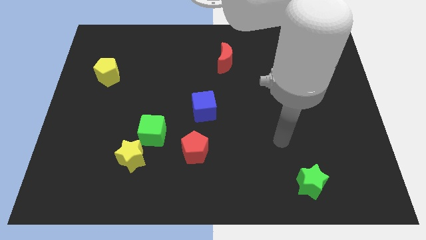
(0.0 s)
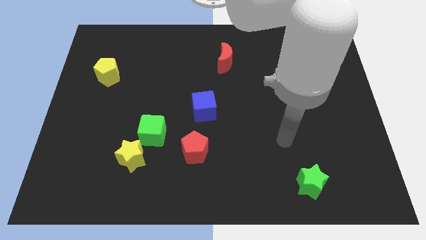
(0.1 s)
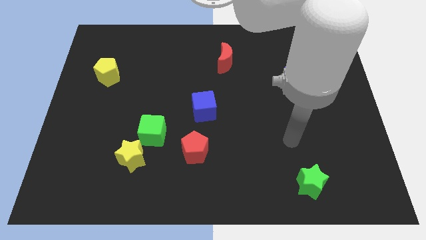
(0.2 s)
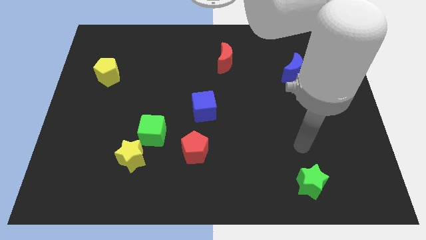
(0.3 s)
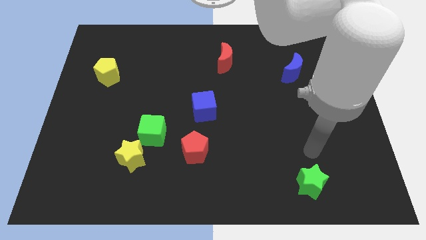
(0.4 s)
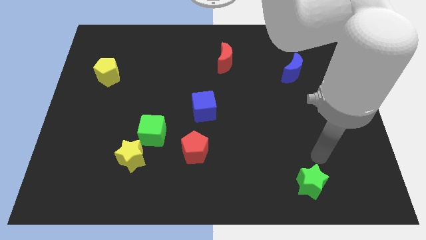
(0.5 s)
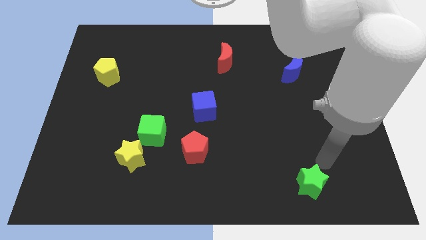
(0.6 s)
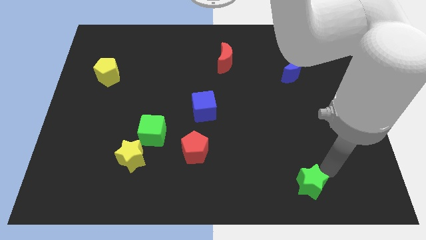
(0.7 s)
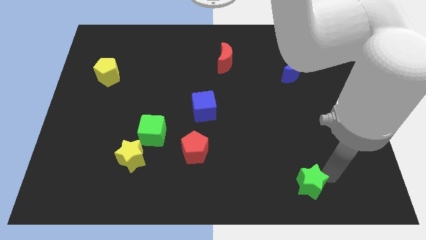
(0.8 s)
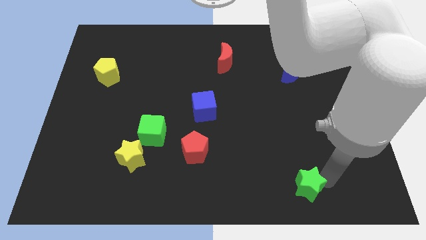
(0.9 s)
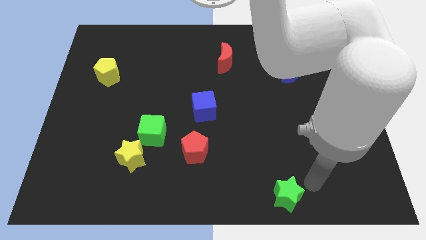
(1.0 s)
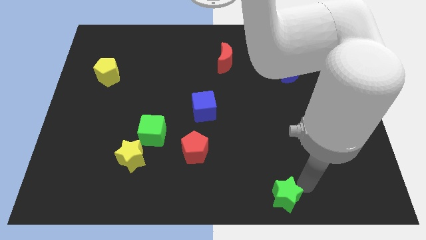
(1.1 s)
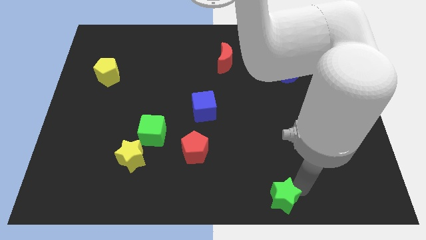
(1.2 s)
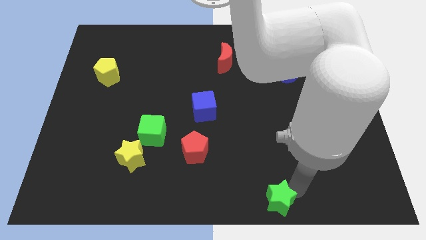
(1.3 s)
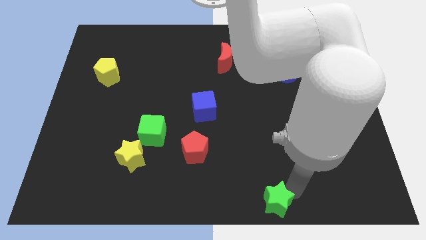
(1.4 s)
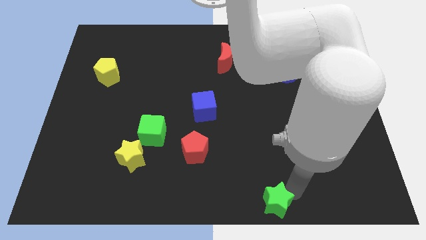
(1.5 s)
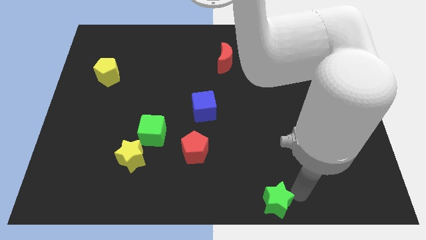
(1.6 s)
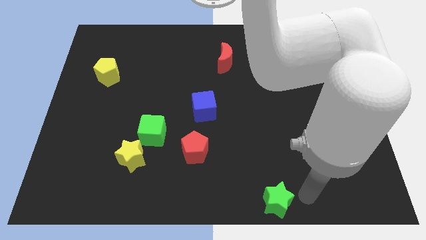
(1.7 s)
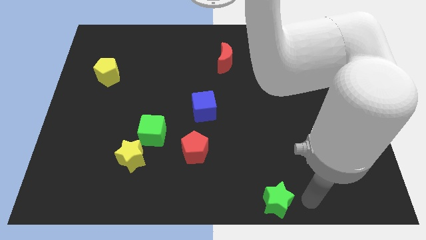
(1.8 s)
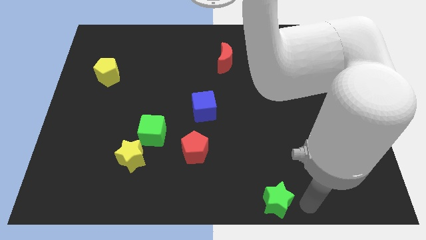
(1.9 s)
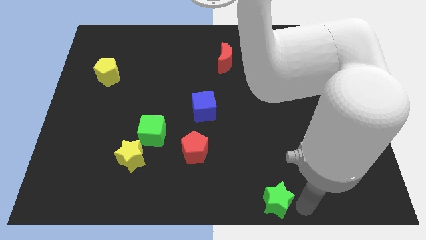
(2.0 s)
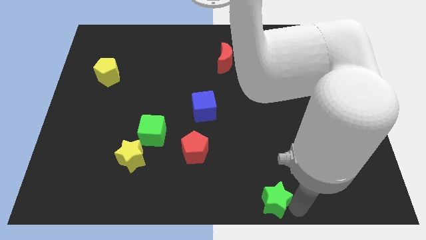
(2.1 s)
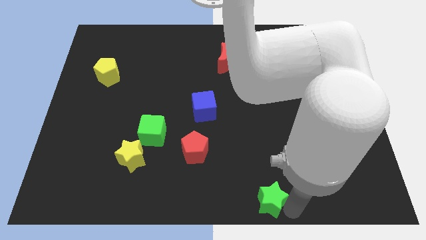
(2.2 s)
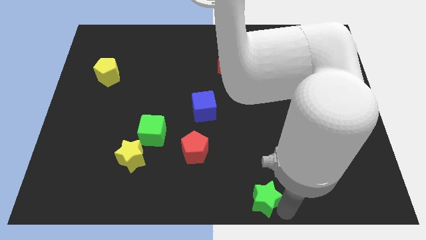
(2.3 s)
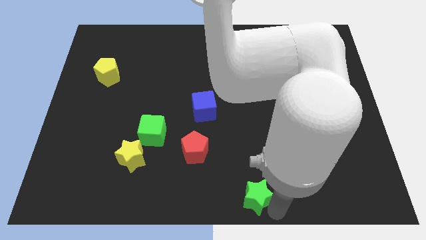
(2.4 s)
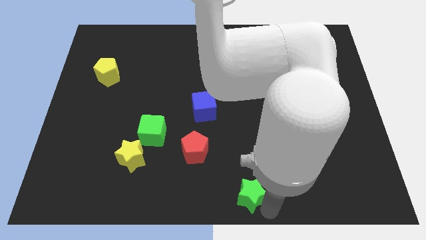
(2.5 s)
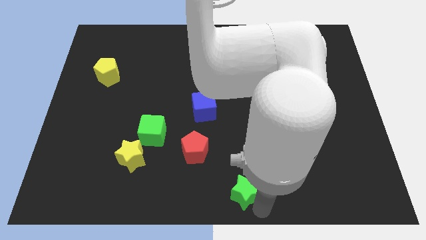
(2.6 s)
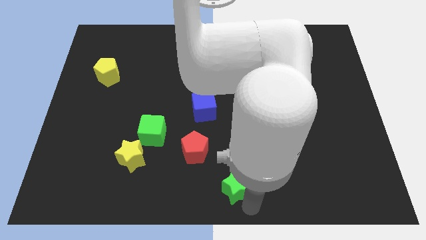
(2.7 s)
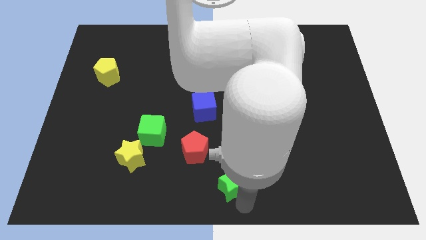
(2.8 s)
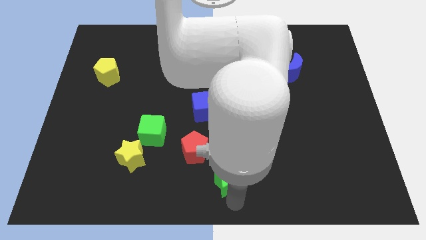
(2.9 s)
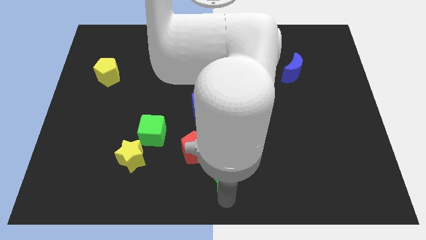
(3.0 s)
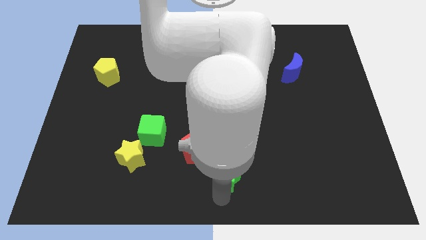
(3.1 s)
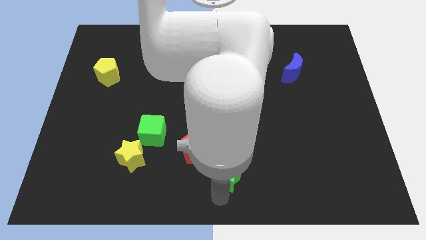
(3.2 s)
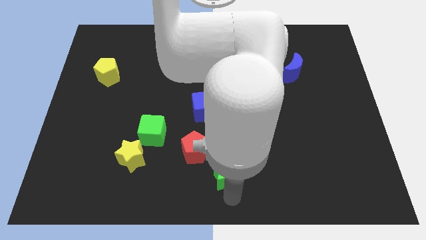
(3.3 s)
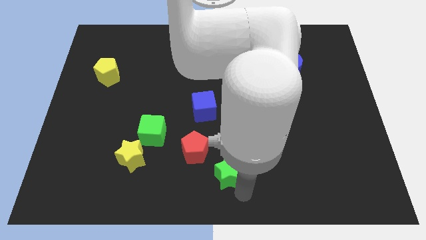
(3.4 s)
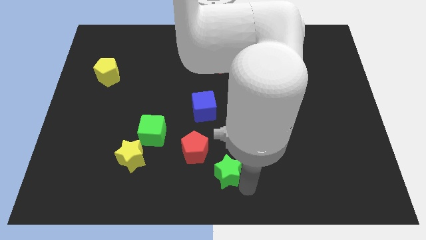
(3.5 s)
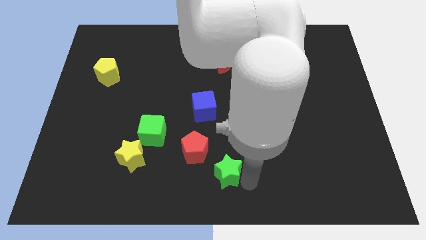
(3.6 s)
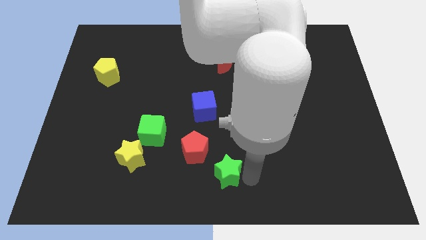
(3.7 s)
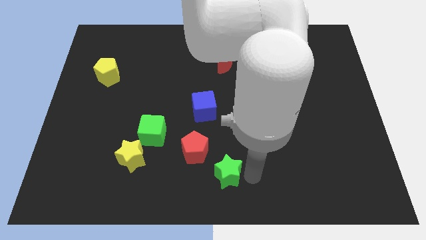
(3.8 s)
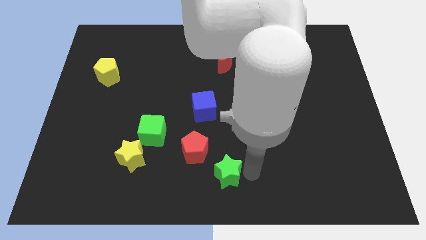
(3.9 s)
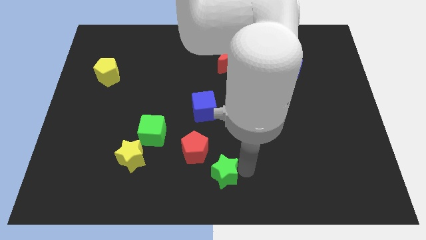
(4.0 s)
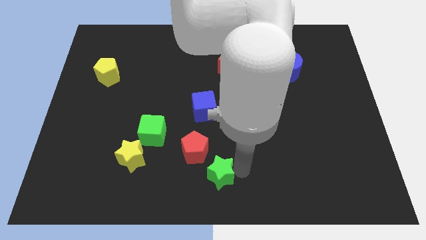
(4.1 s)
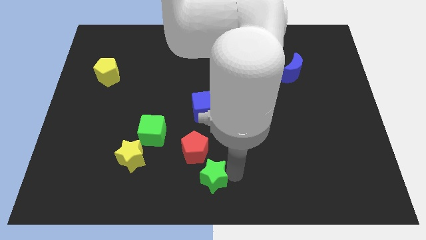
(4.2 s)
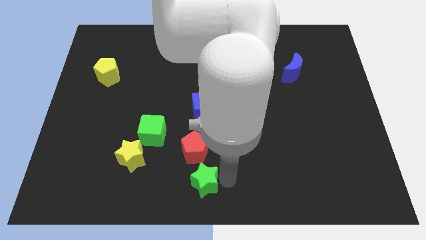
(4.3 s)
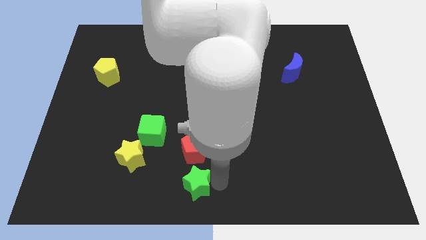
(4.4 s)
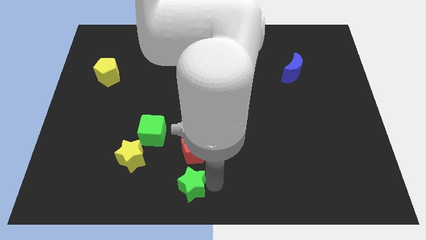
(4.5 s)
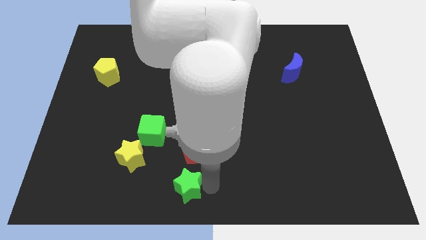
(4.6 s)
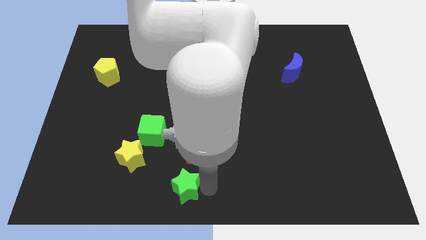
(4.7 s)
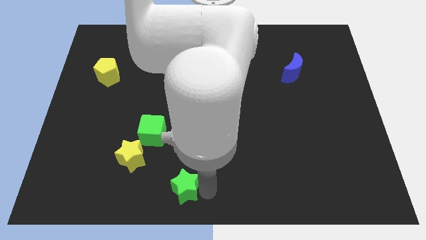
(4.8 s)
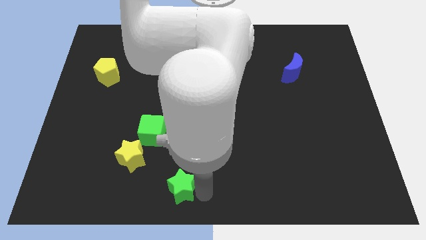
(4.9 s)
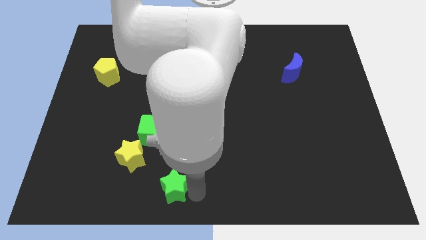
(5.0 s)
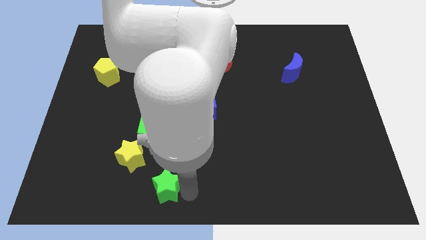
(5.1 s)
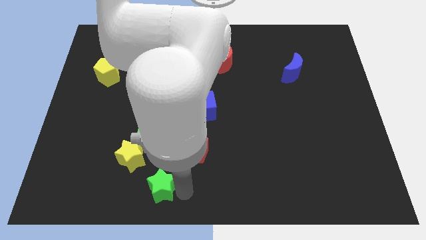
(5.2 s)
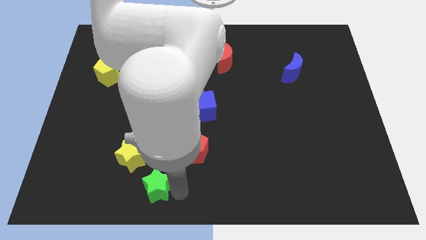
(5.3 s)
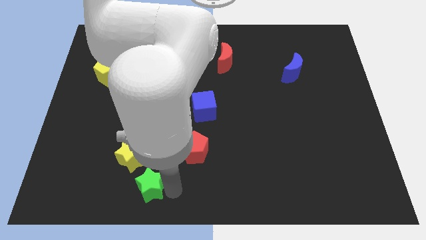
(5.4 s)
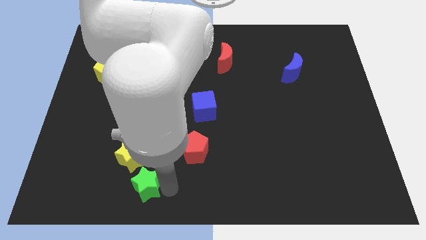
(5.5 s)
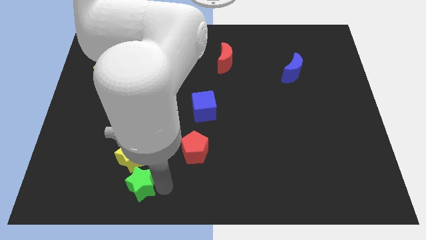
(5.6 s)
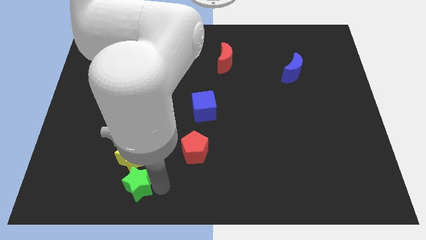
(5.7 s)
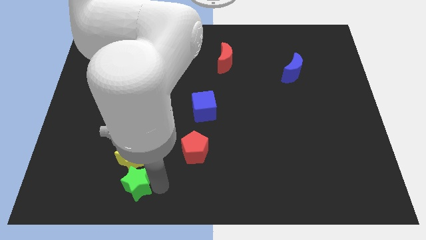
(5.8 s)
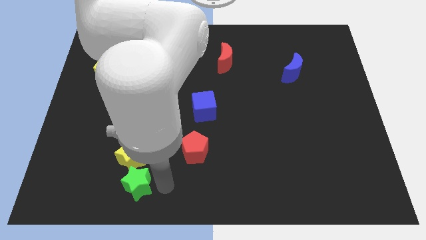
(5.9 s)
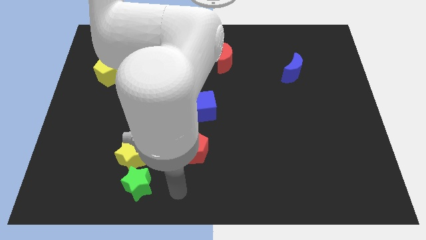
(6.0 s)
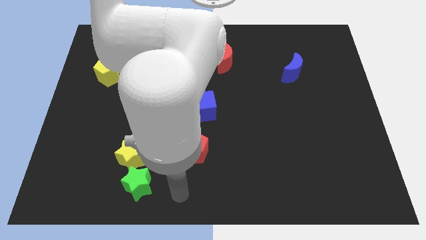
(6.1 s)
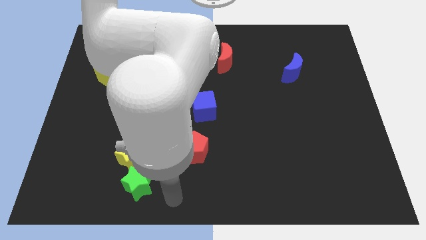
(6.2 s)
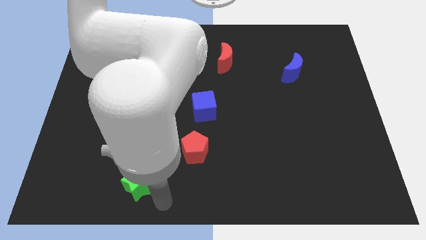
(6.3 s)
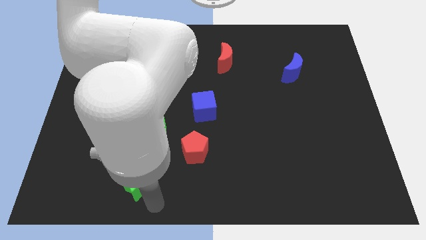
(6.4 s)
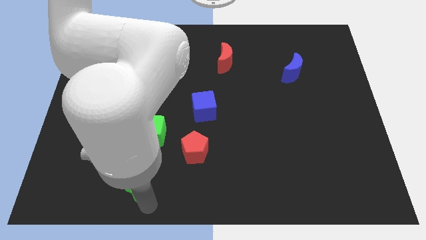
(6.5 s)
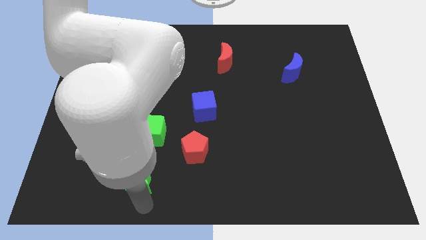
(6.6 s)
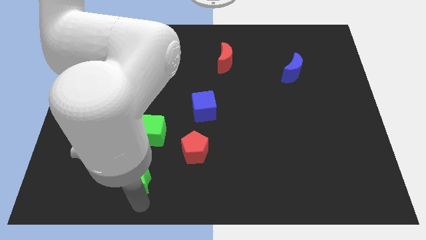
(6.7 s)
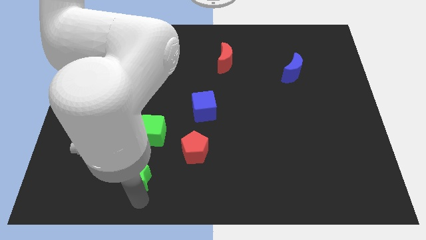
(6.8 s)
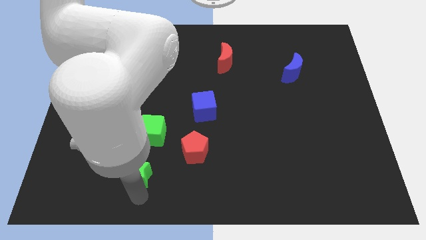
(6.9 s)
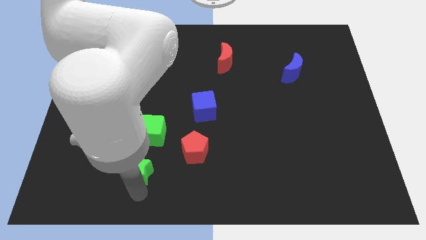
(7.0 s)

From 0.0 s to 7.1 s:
slide the green star towards the yellow star

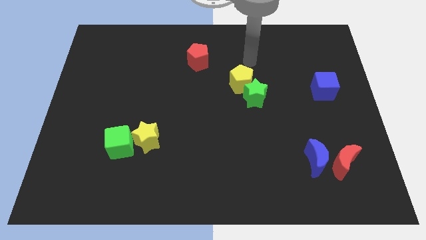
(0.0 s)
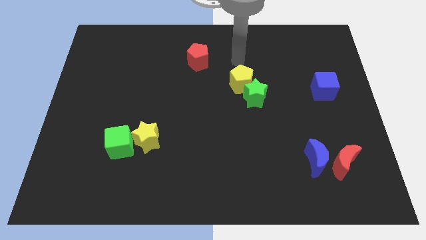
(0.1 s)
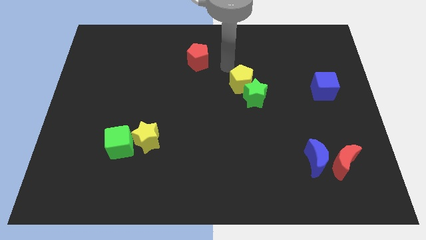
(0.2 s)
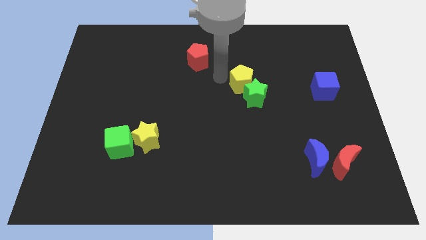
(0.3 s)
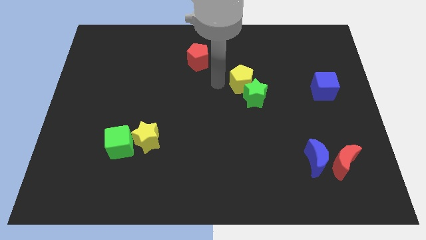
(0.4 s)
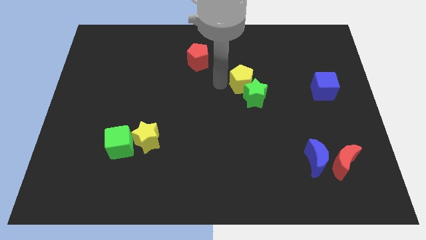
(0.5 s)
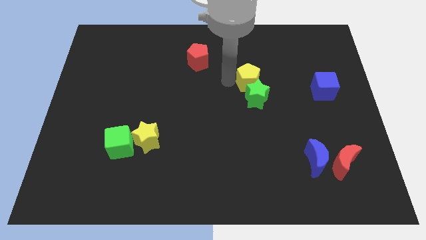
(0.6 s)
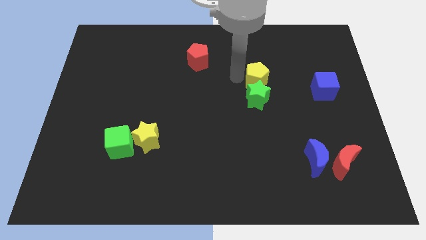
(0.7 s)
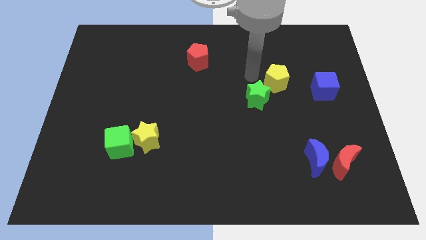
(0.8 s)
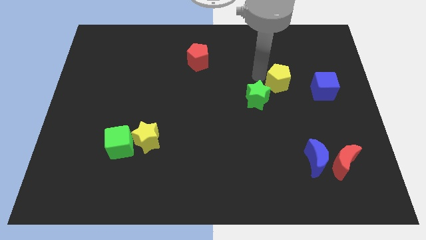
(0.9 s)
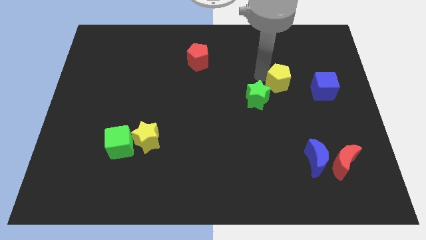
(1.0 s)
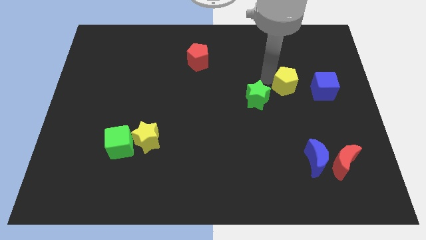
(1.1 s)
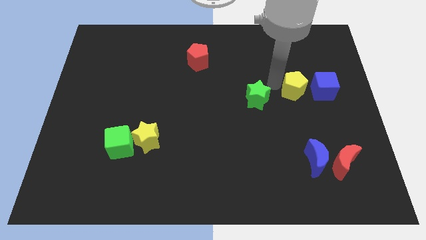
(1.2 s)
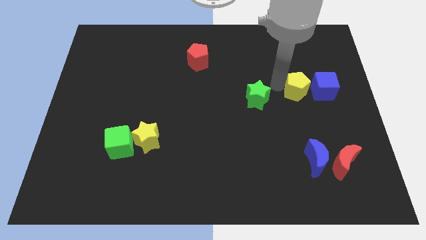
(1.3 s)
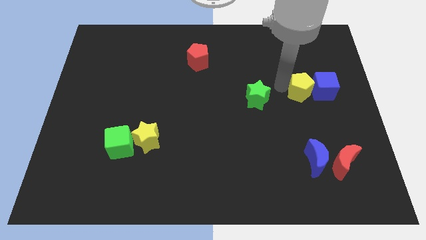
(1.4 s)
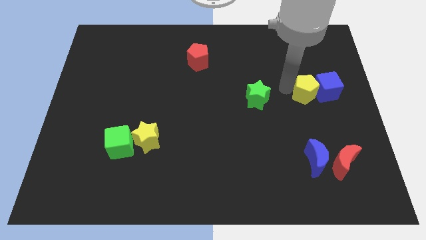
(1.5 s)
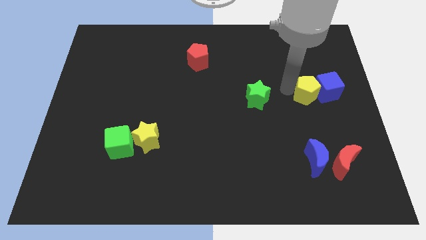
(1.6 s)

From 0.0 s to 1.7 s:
put the yellow pentagon next to the blue cube
